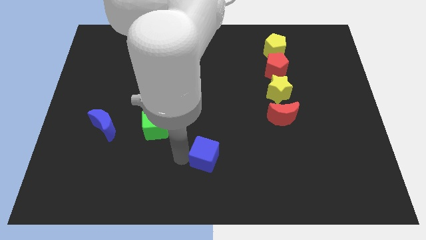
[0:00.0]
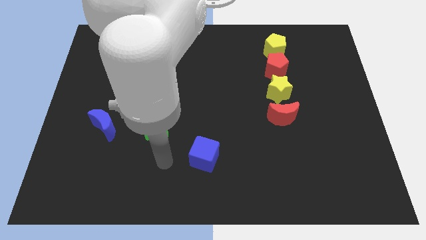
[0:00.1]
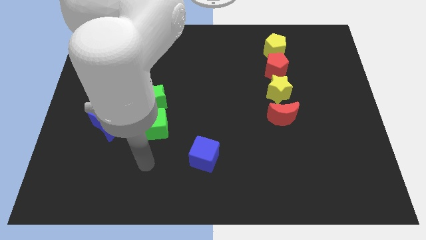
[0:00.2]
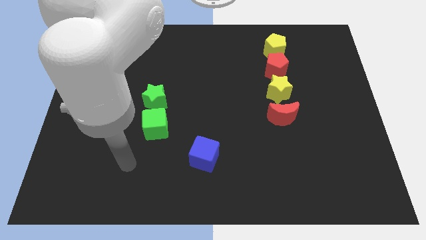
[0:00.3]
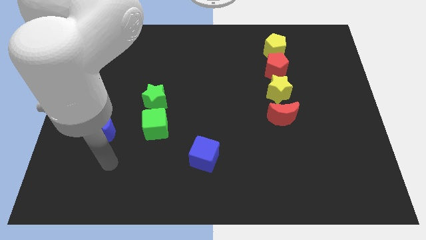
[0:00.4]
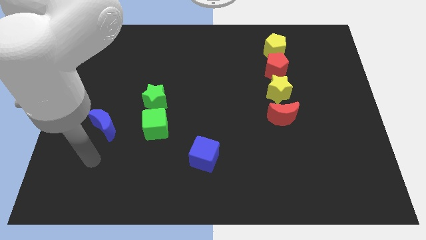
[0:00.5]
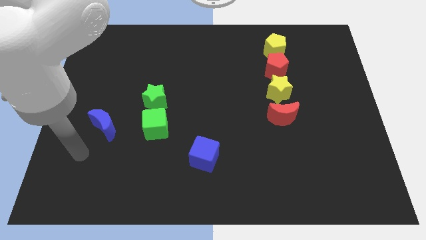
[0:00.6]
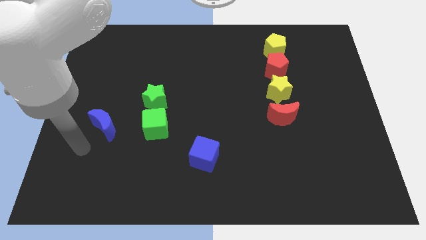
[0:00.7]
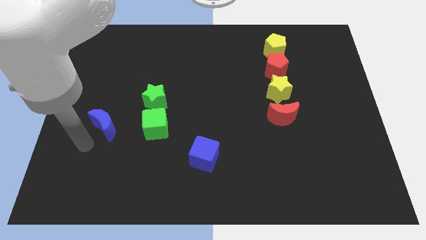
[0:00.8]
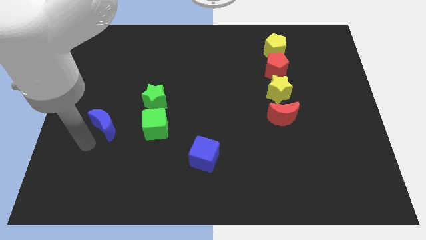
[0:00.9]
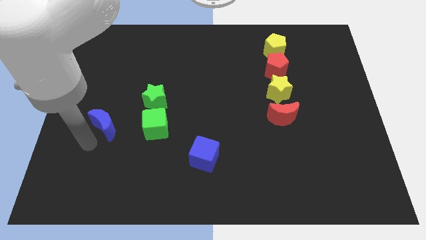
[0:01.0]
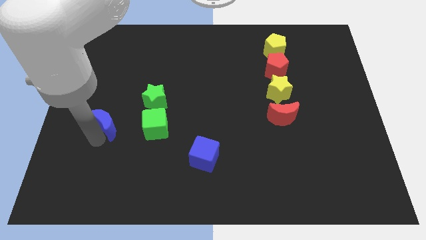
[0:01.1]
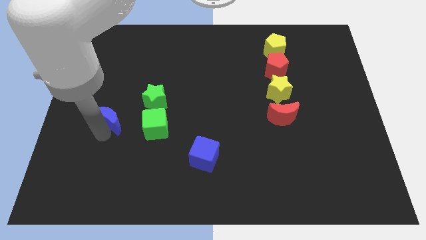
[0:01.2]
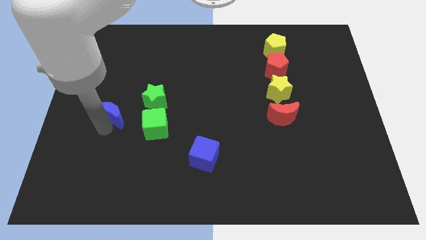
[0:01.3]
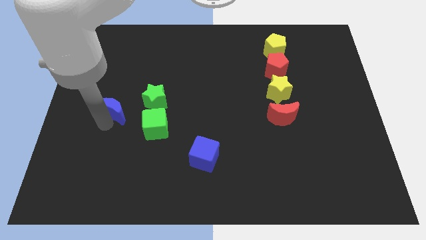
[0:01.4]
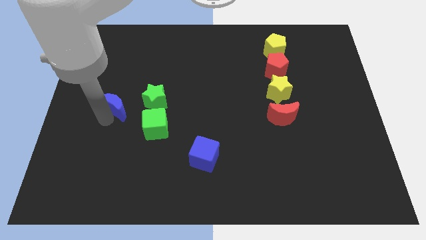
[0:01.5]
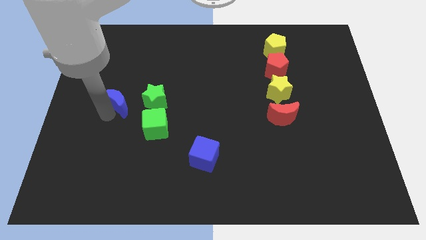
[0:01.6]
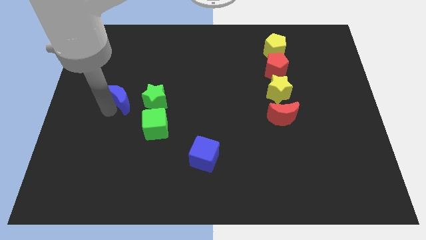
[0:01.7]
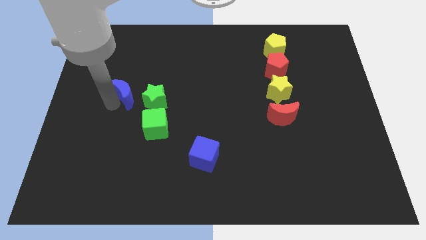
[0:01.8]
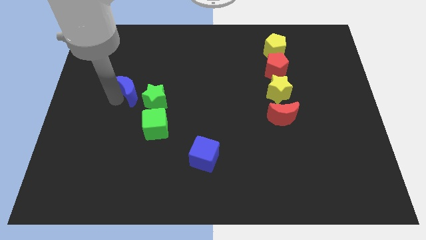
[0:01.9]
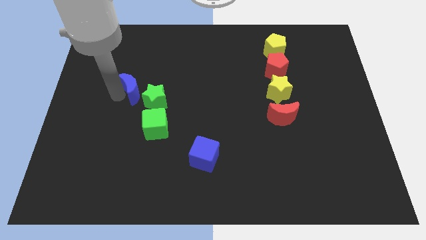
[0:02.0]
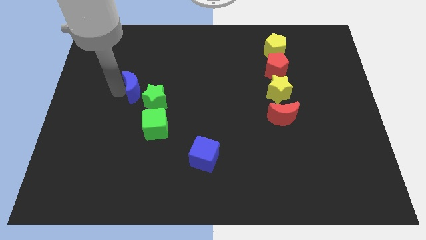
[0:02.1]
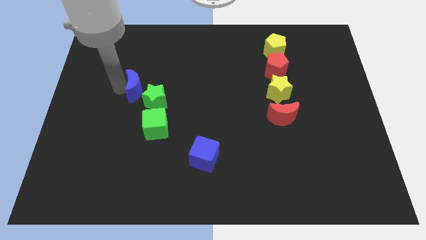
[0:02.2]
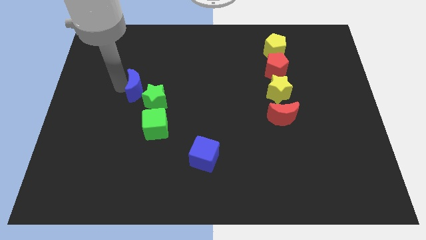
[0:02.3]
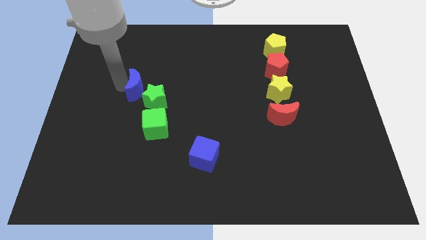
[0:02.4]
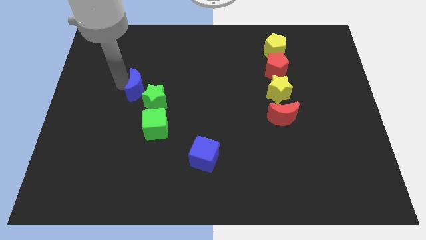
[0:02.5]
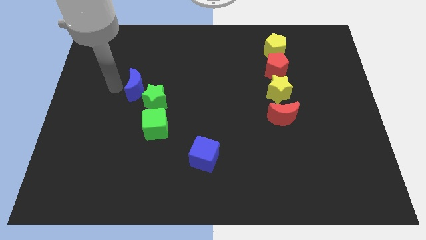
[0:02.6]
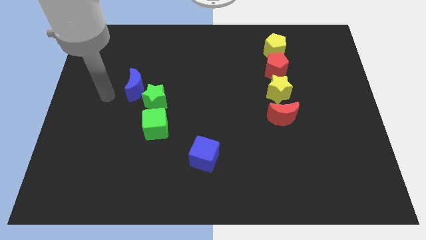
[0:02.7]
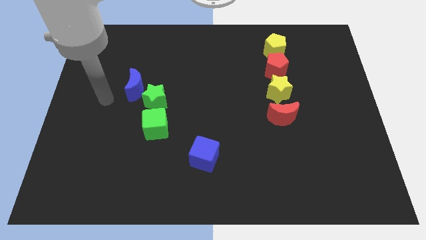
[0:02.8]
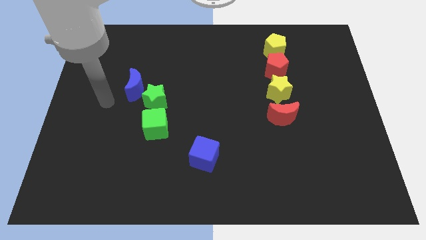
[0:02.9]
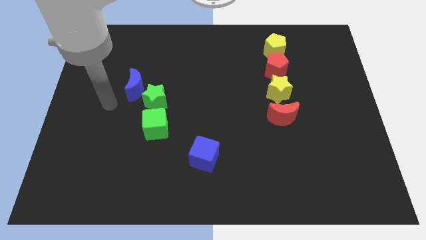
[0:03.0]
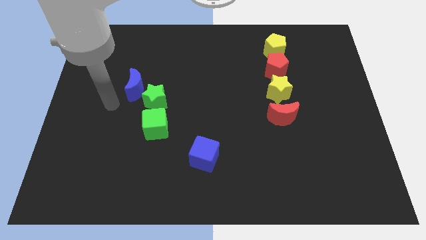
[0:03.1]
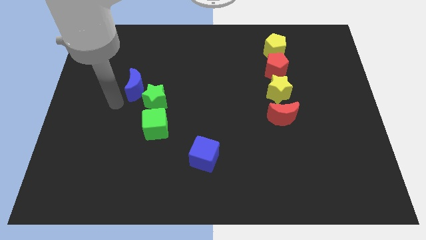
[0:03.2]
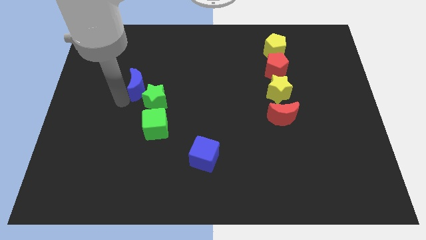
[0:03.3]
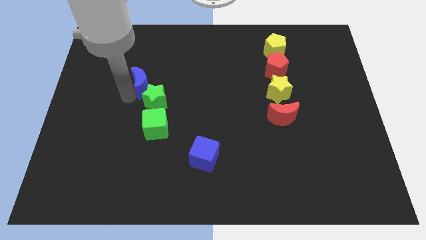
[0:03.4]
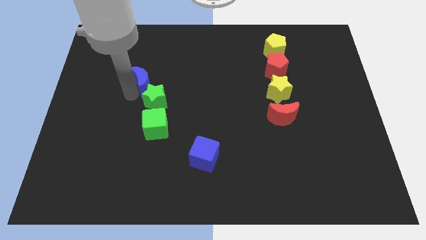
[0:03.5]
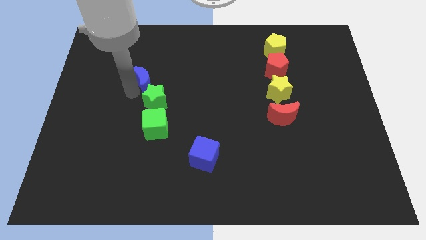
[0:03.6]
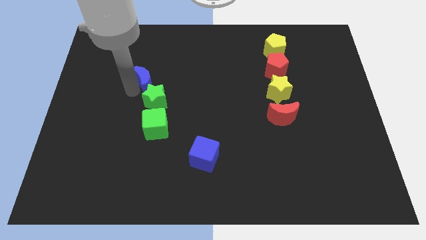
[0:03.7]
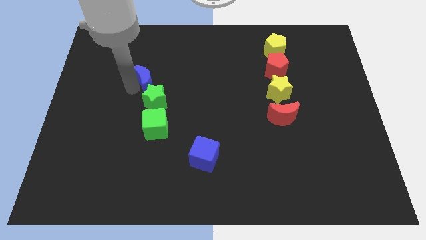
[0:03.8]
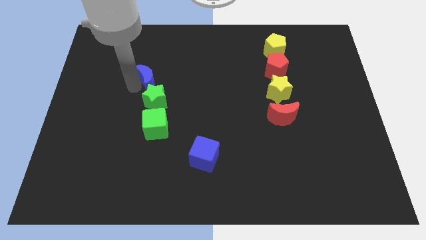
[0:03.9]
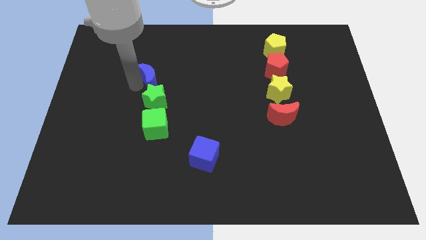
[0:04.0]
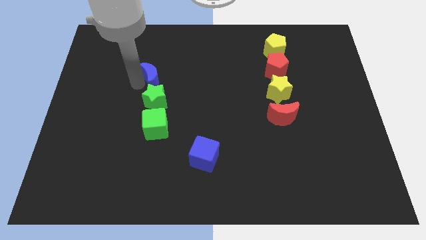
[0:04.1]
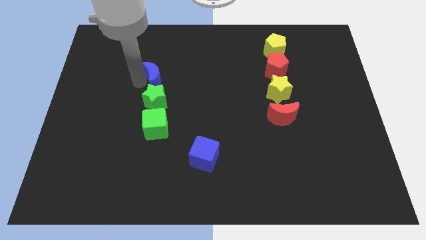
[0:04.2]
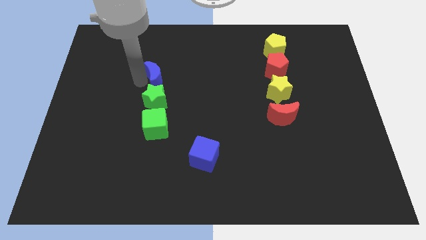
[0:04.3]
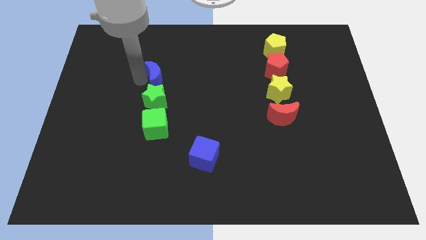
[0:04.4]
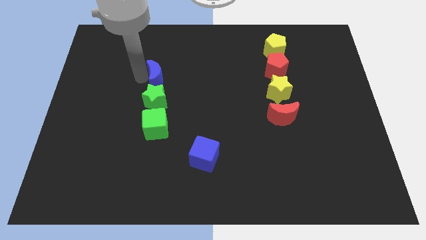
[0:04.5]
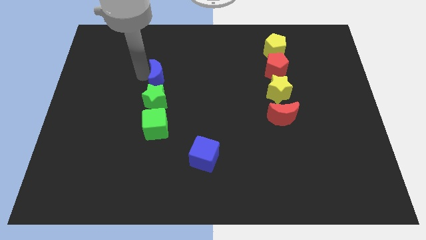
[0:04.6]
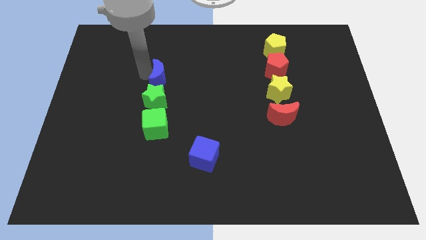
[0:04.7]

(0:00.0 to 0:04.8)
push the blue moon on the top of green star

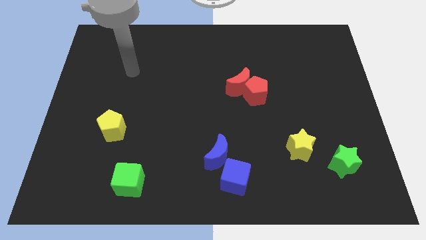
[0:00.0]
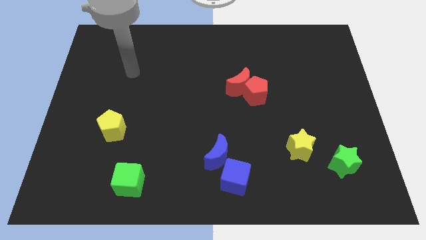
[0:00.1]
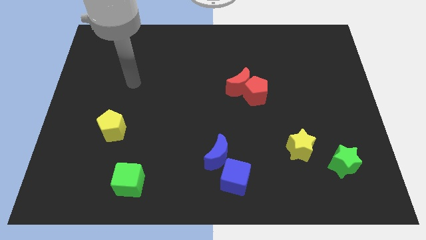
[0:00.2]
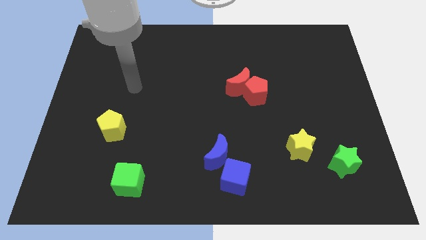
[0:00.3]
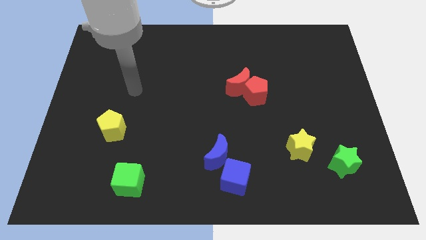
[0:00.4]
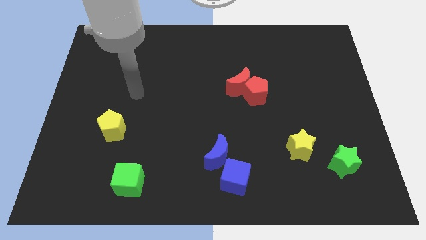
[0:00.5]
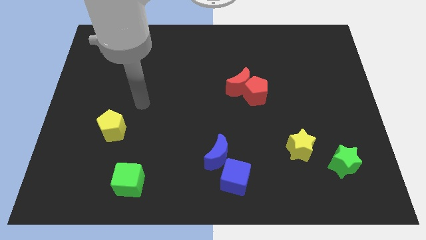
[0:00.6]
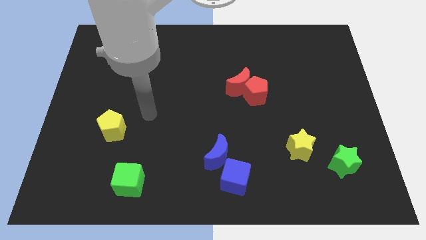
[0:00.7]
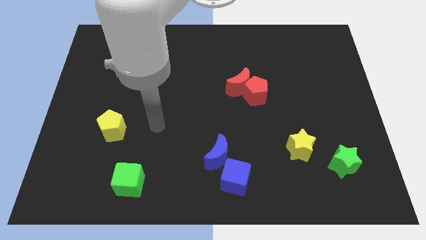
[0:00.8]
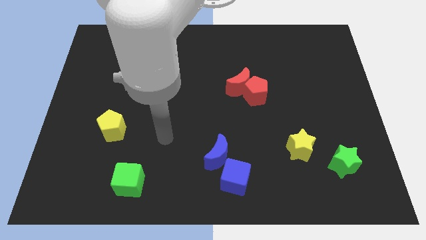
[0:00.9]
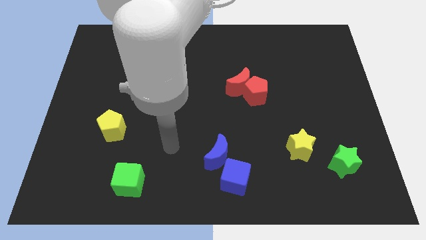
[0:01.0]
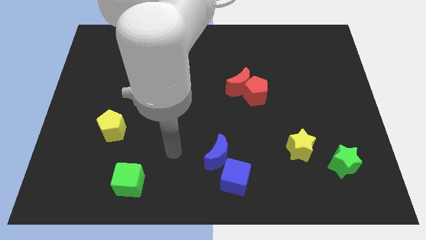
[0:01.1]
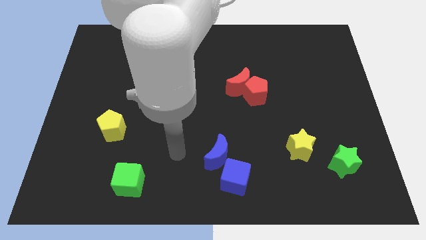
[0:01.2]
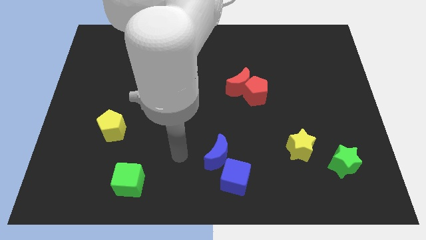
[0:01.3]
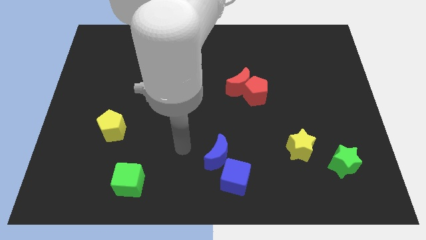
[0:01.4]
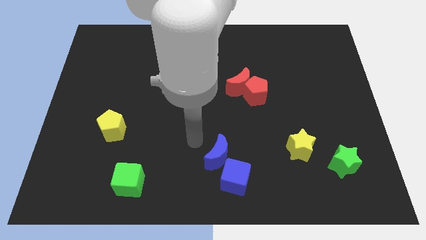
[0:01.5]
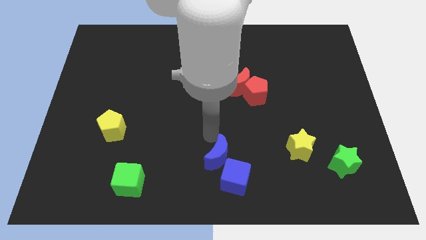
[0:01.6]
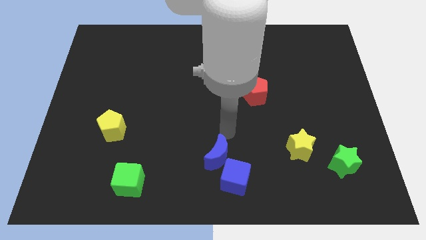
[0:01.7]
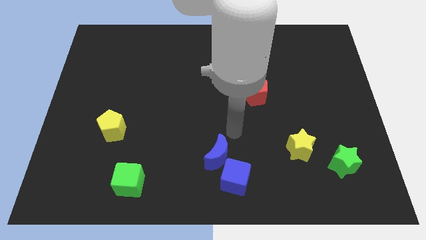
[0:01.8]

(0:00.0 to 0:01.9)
point your arm diagonal above the blue moon

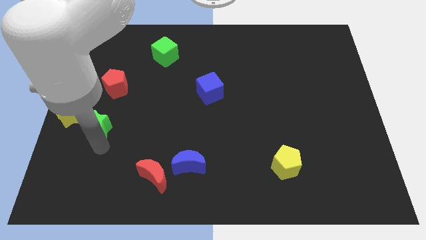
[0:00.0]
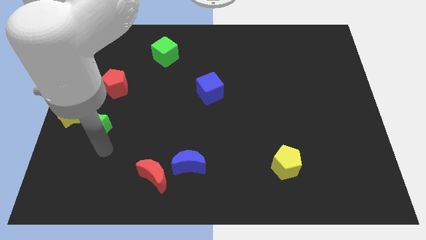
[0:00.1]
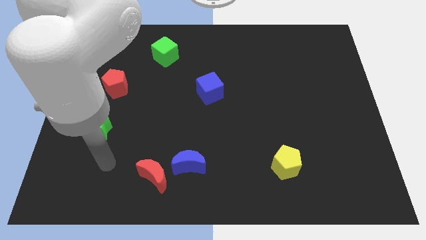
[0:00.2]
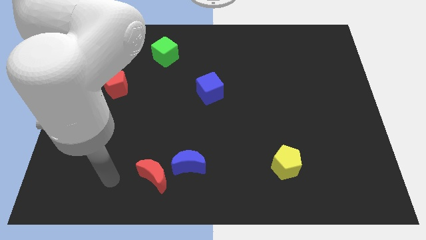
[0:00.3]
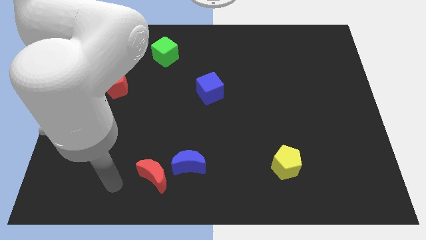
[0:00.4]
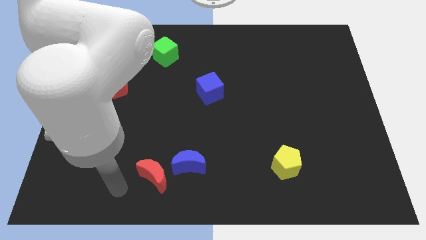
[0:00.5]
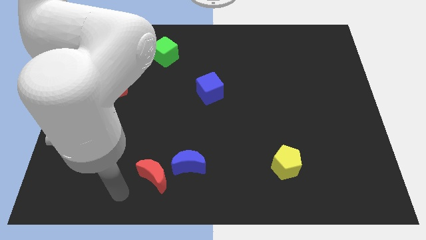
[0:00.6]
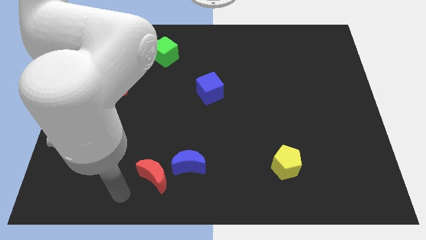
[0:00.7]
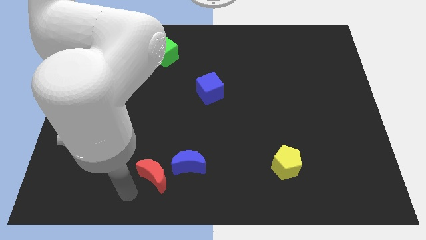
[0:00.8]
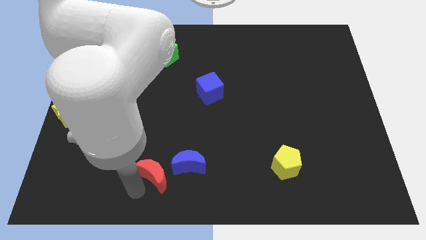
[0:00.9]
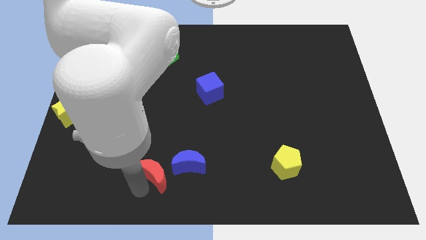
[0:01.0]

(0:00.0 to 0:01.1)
go away from the green star

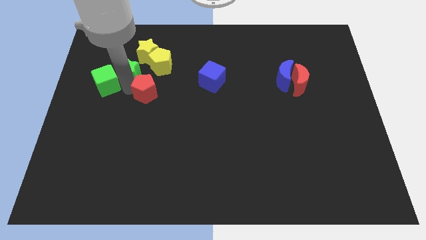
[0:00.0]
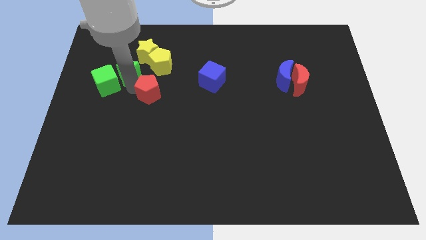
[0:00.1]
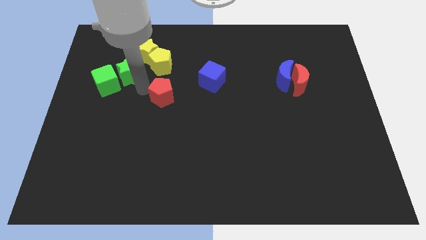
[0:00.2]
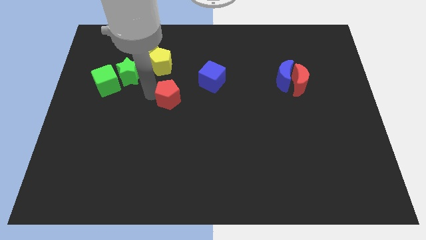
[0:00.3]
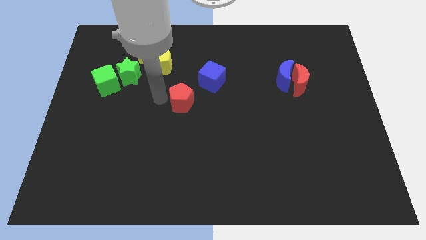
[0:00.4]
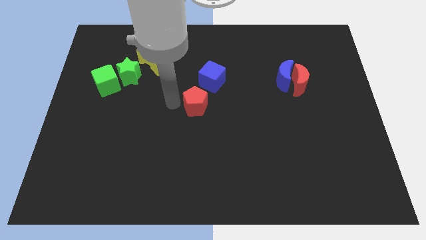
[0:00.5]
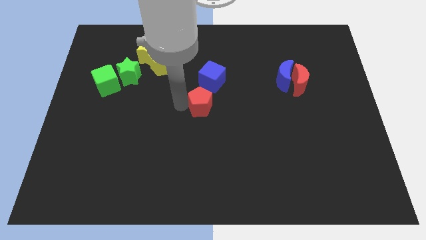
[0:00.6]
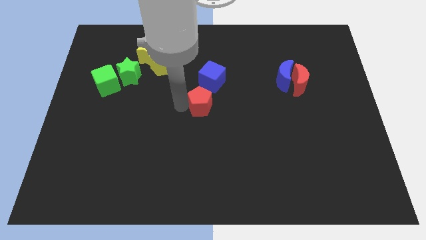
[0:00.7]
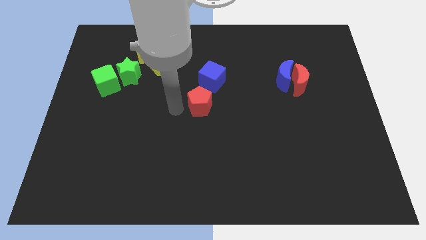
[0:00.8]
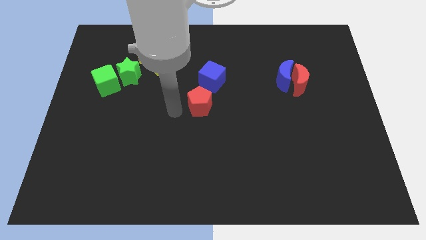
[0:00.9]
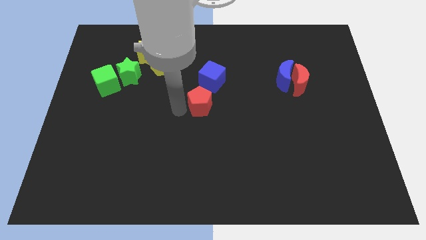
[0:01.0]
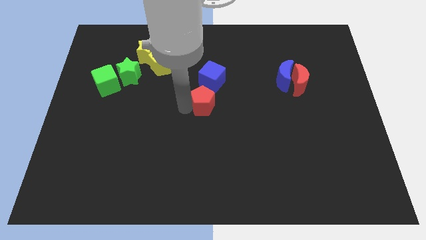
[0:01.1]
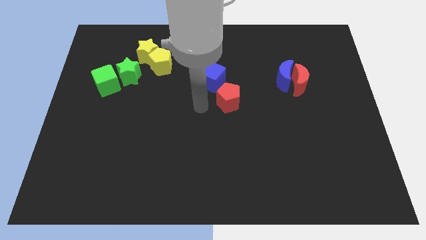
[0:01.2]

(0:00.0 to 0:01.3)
move the red pentagon bottom right to the blue cube
